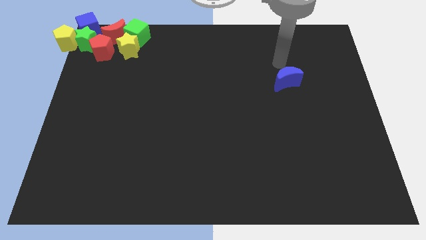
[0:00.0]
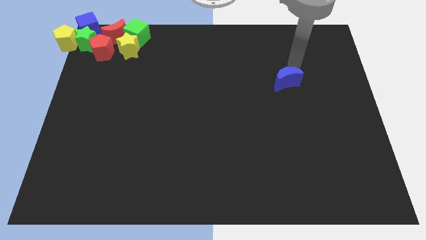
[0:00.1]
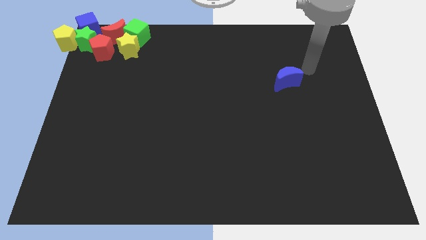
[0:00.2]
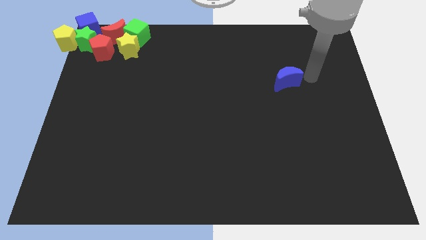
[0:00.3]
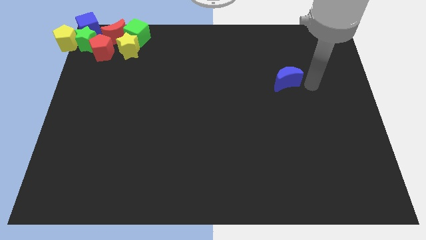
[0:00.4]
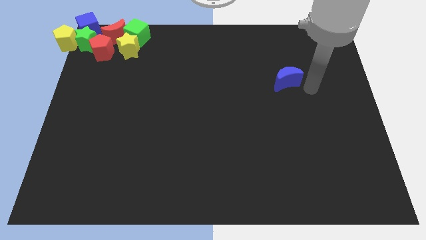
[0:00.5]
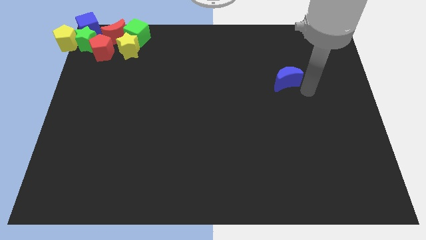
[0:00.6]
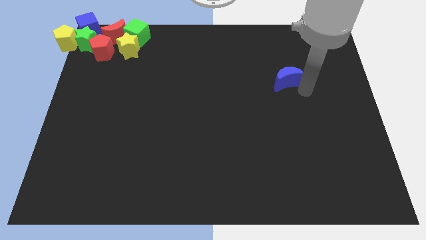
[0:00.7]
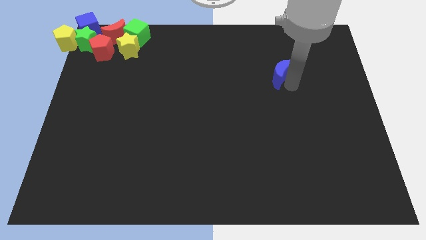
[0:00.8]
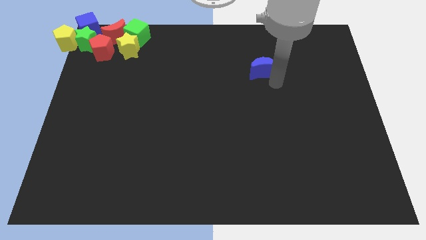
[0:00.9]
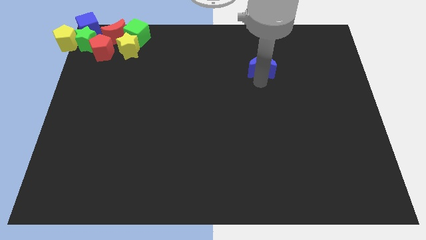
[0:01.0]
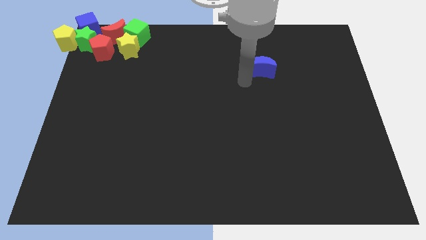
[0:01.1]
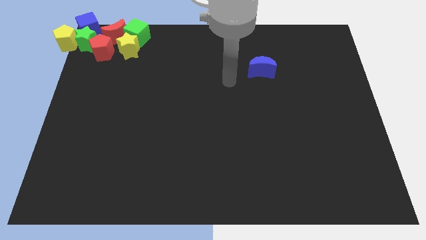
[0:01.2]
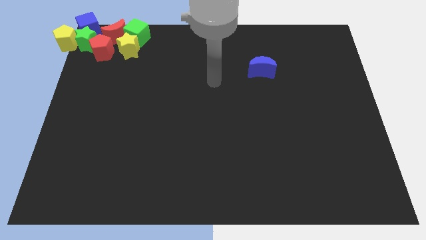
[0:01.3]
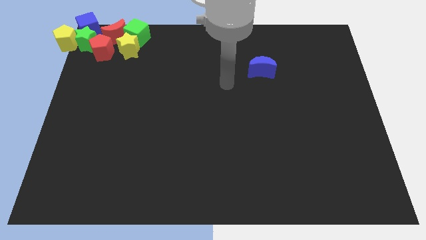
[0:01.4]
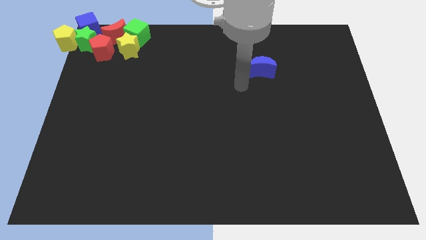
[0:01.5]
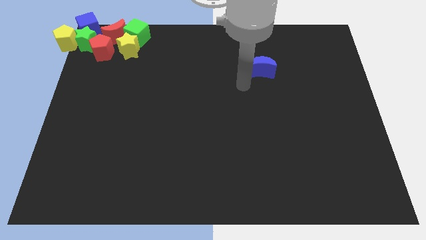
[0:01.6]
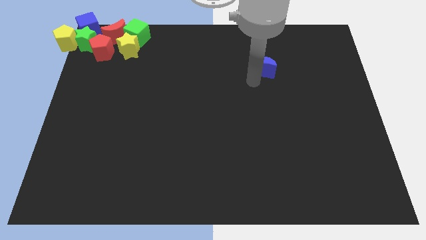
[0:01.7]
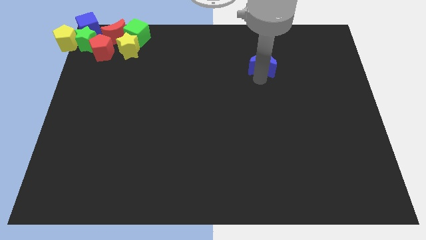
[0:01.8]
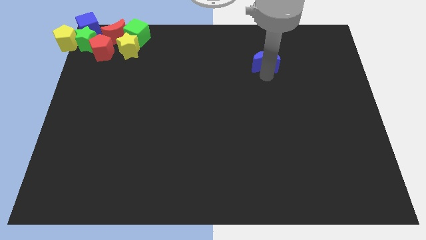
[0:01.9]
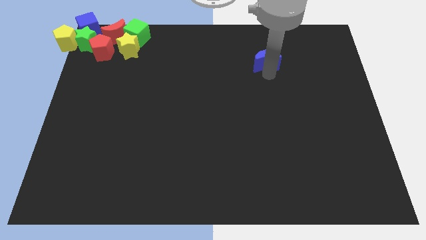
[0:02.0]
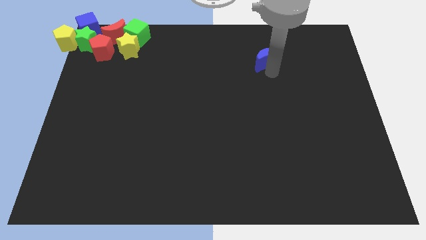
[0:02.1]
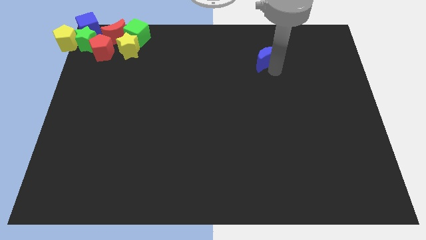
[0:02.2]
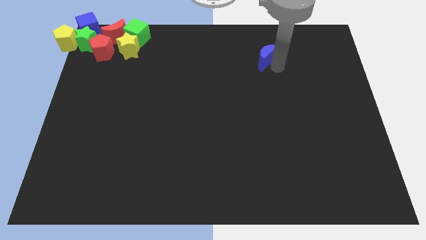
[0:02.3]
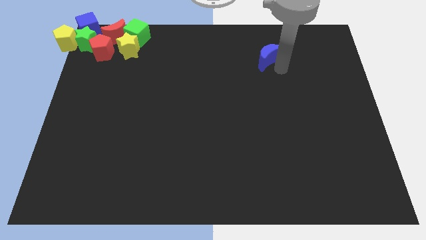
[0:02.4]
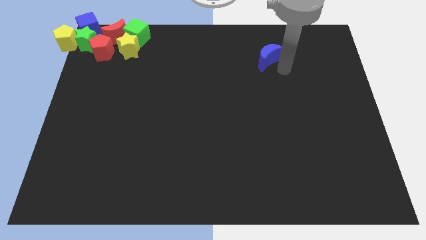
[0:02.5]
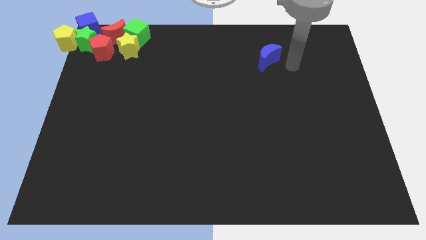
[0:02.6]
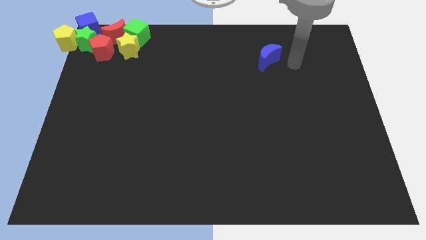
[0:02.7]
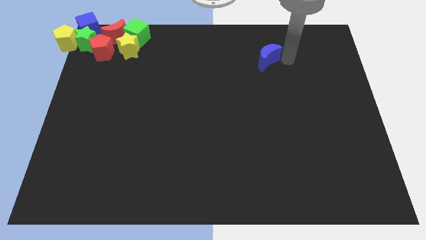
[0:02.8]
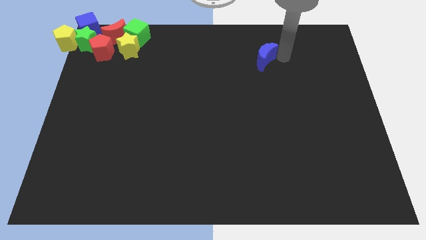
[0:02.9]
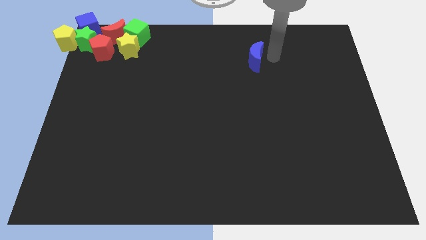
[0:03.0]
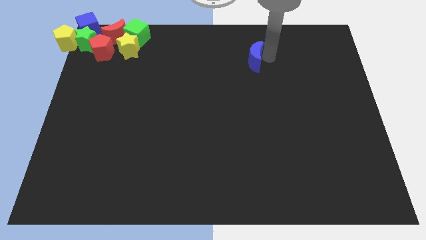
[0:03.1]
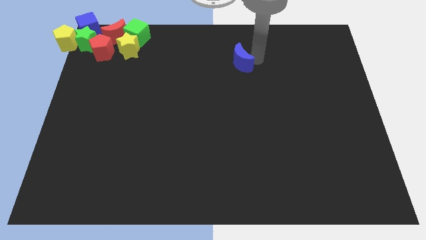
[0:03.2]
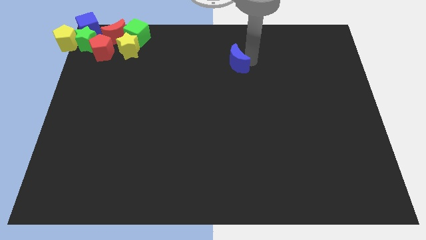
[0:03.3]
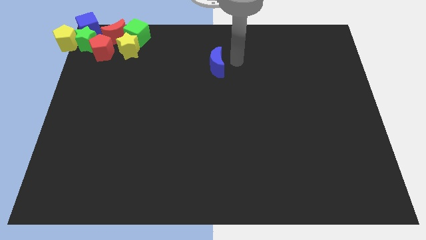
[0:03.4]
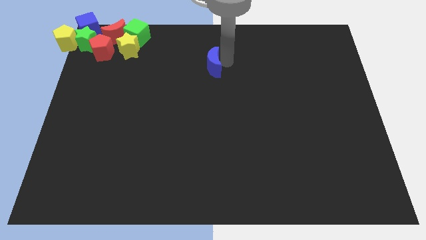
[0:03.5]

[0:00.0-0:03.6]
place the blue moon on the top middle of the board

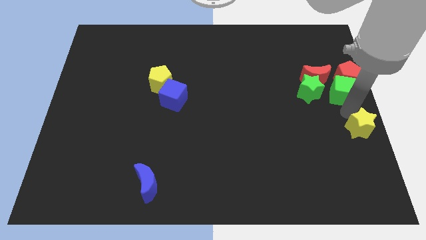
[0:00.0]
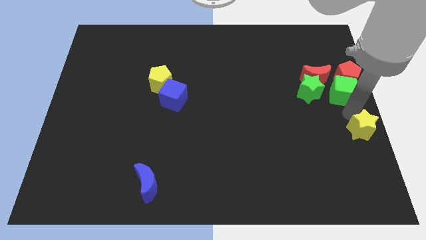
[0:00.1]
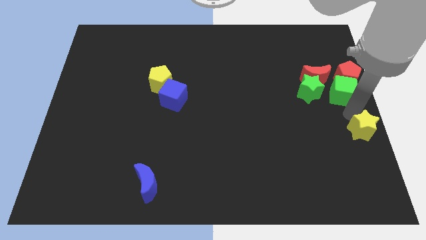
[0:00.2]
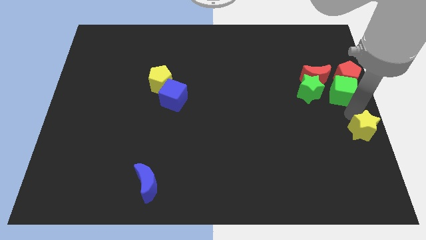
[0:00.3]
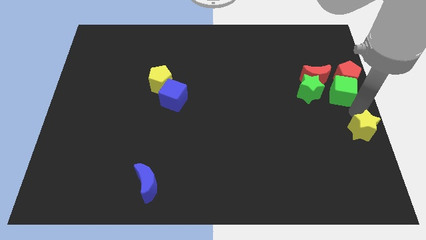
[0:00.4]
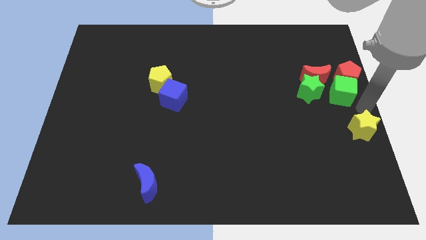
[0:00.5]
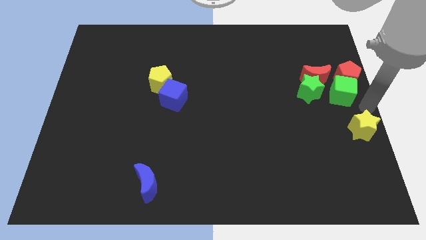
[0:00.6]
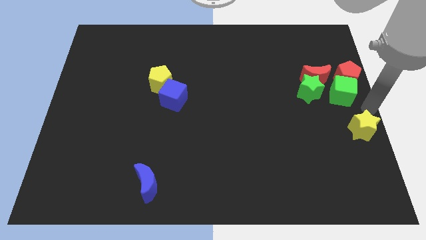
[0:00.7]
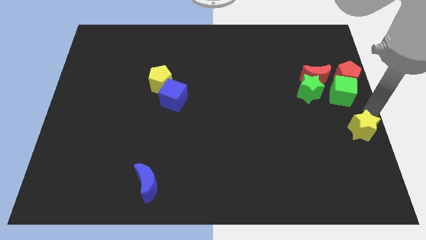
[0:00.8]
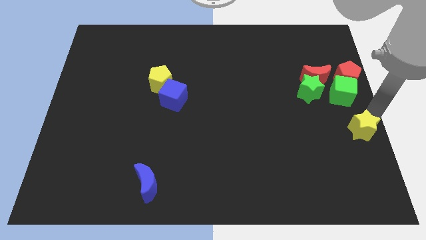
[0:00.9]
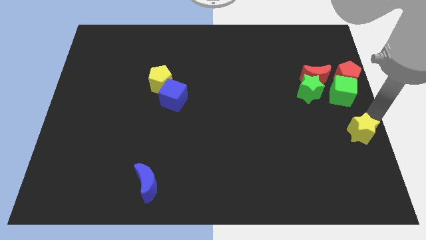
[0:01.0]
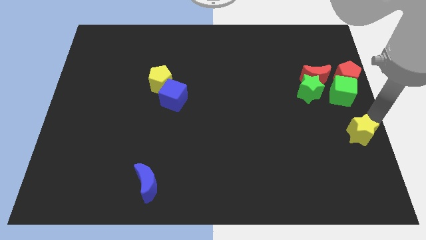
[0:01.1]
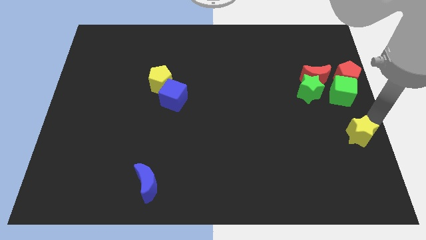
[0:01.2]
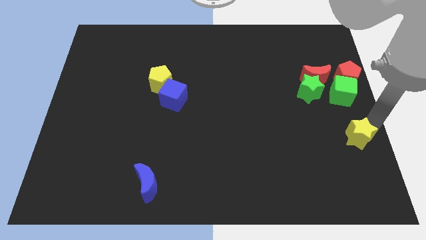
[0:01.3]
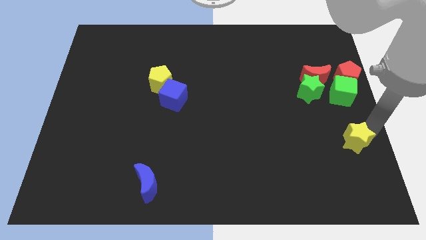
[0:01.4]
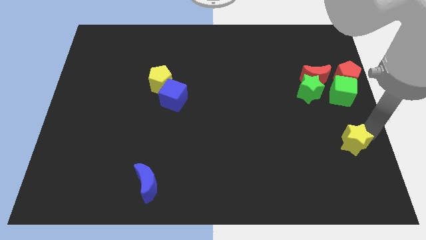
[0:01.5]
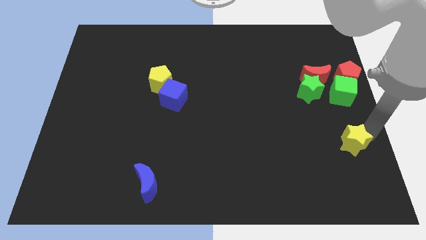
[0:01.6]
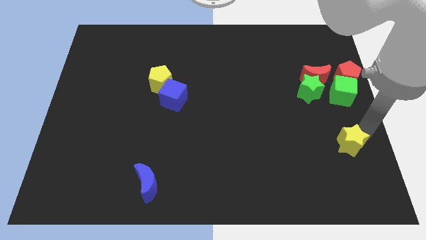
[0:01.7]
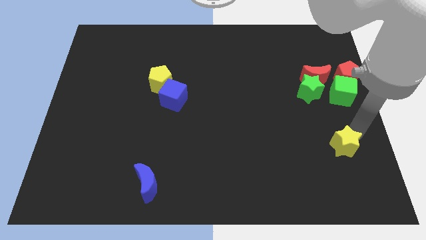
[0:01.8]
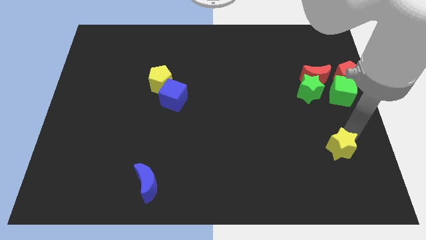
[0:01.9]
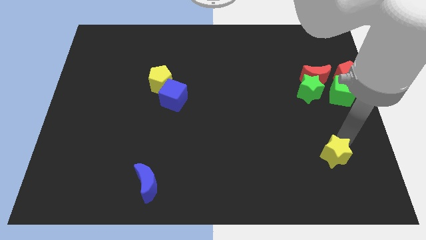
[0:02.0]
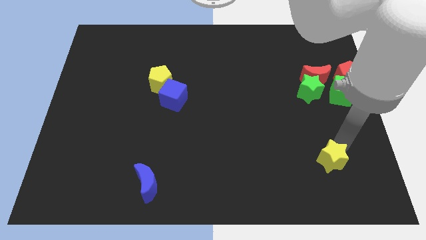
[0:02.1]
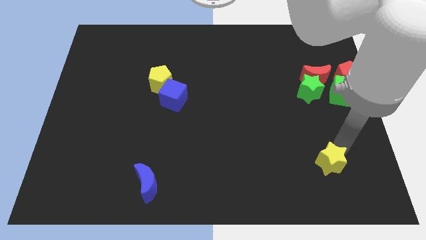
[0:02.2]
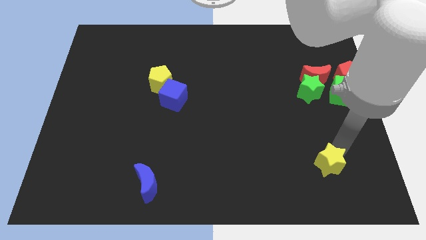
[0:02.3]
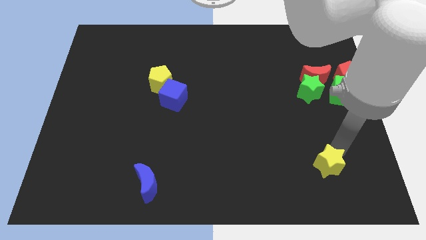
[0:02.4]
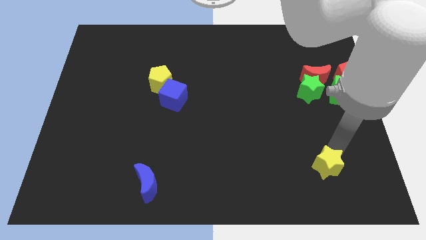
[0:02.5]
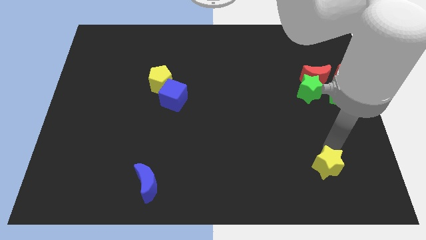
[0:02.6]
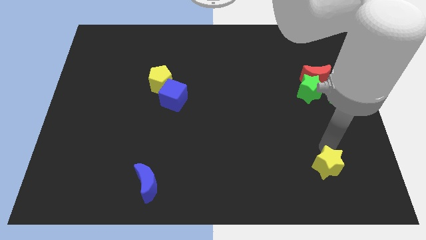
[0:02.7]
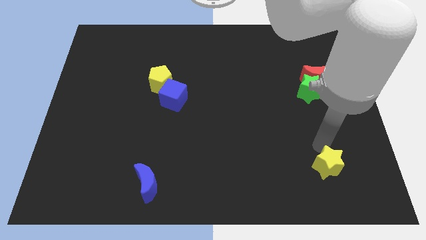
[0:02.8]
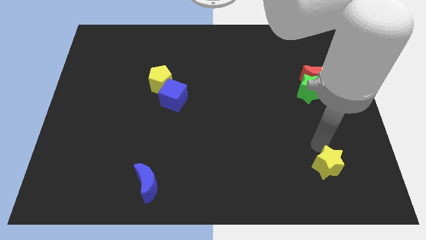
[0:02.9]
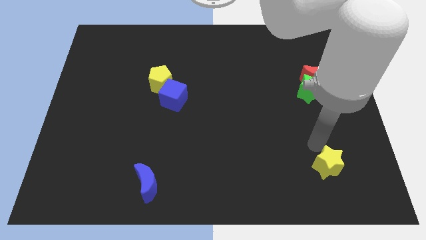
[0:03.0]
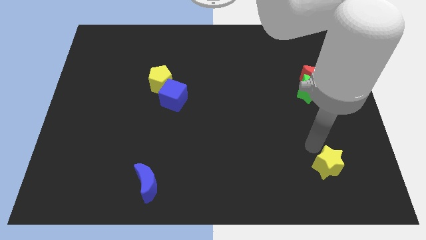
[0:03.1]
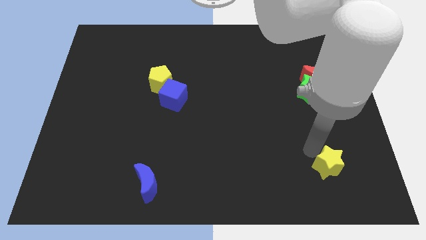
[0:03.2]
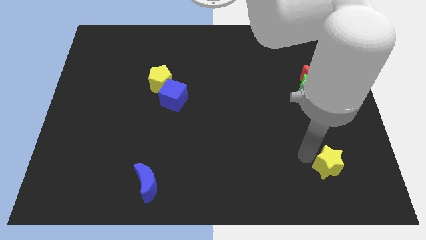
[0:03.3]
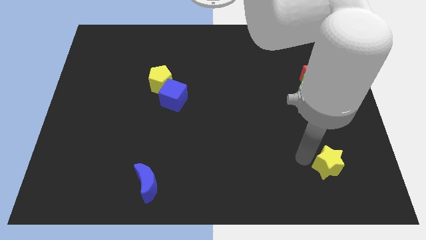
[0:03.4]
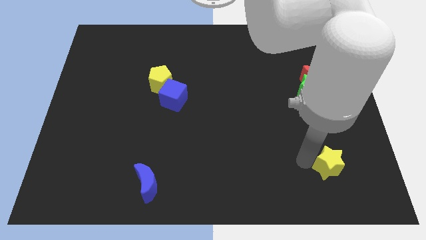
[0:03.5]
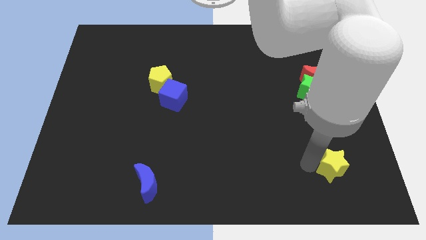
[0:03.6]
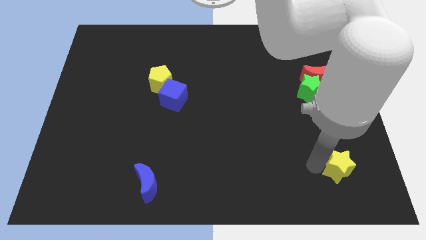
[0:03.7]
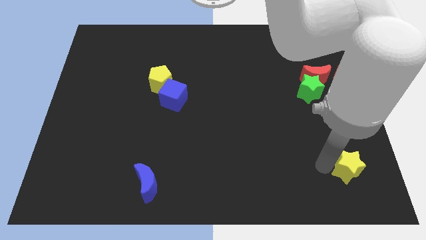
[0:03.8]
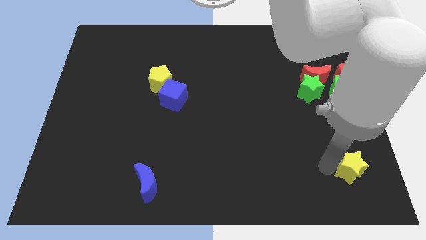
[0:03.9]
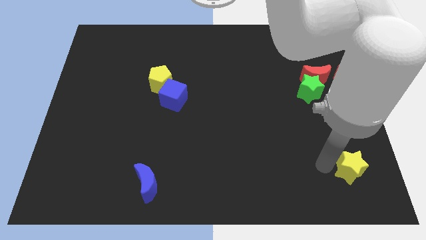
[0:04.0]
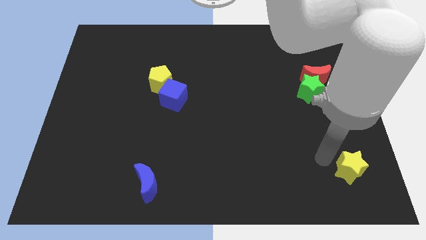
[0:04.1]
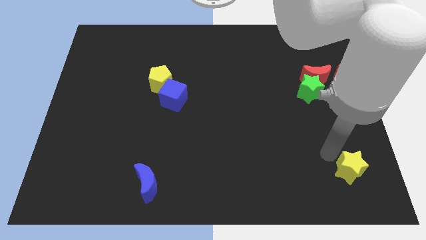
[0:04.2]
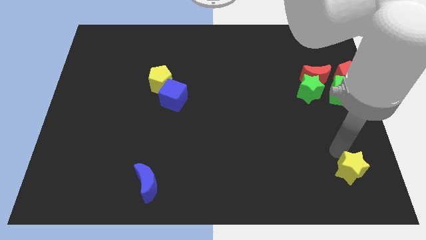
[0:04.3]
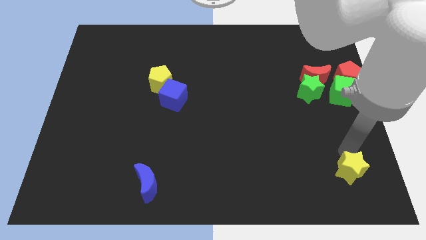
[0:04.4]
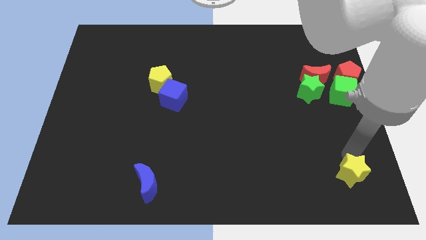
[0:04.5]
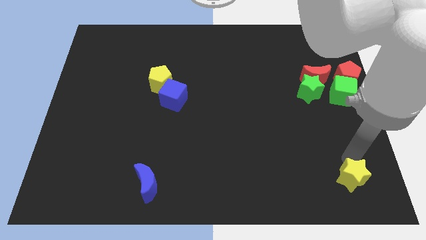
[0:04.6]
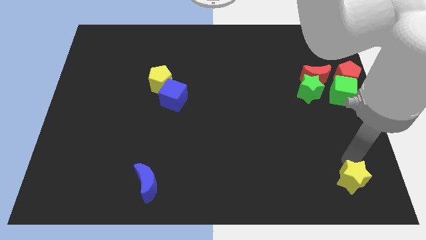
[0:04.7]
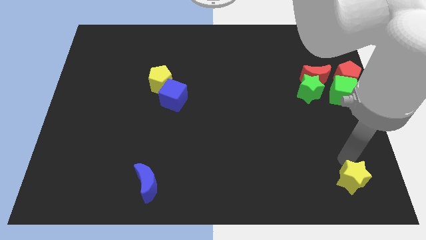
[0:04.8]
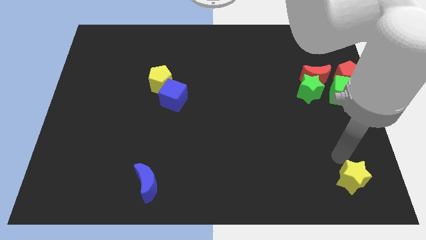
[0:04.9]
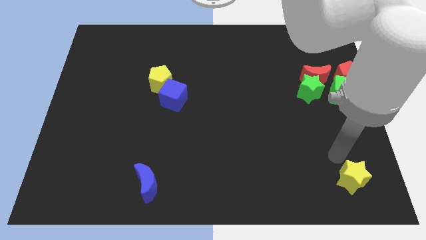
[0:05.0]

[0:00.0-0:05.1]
push the yellow star to the bottom right corner of the board

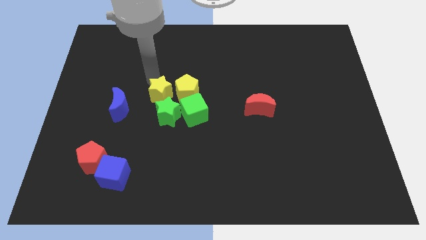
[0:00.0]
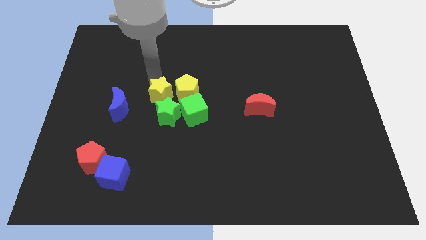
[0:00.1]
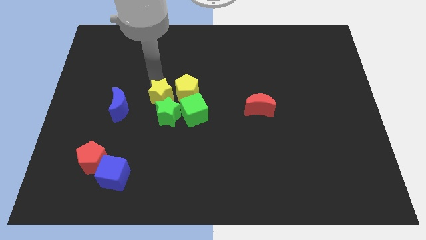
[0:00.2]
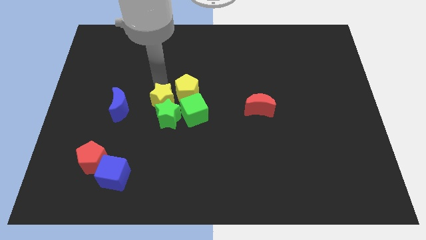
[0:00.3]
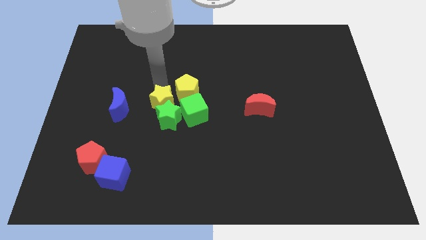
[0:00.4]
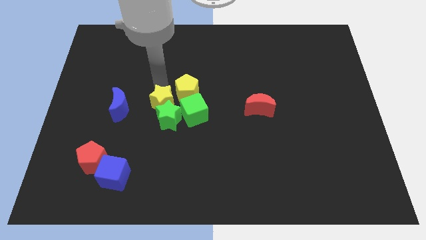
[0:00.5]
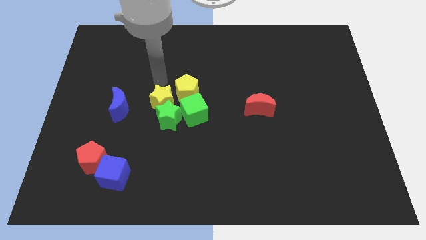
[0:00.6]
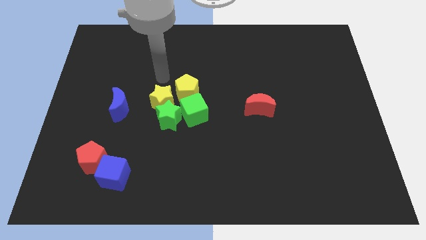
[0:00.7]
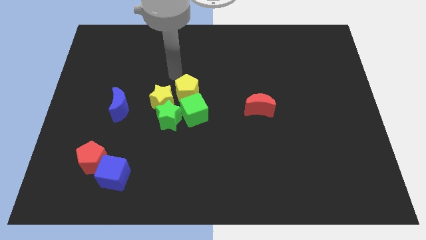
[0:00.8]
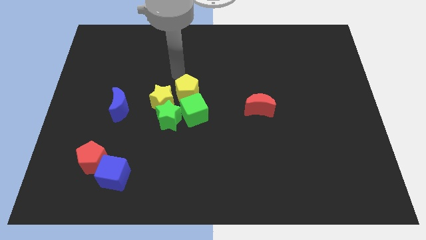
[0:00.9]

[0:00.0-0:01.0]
move the green star with the yellow star
